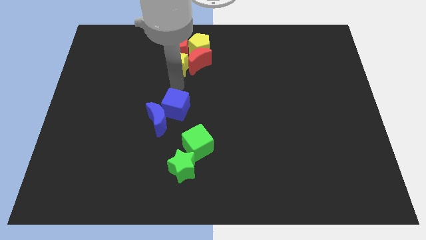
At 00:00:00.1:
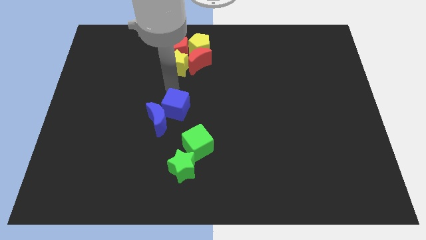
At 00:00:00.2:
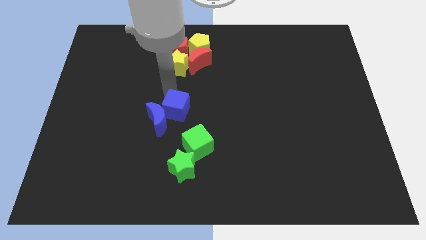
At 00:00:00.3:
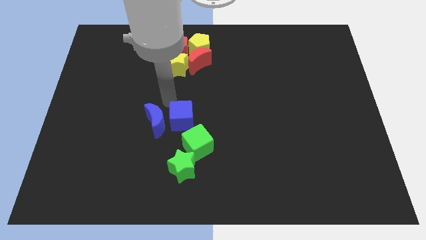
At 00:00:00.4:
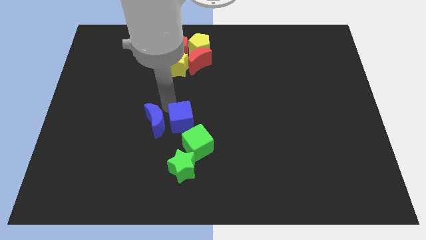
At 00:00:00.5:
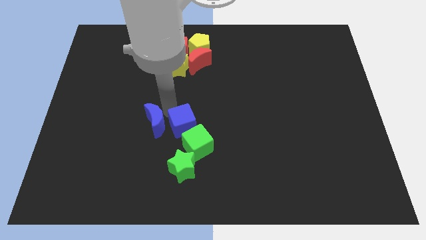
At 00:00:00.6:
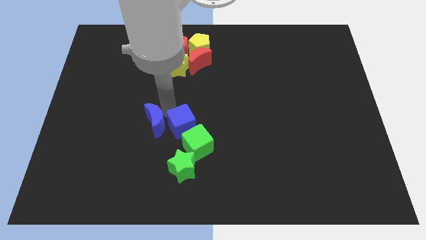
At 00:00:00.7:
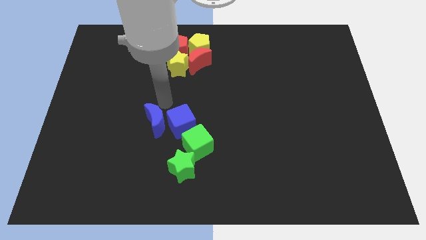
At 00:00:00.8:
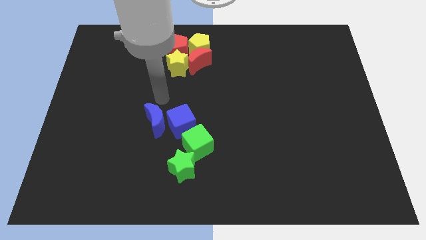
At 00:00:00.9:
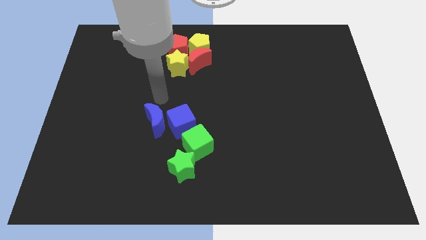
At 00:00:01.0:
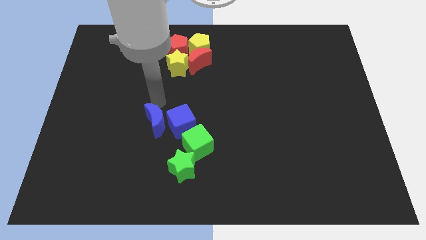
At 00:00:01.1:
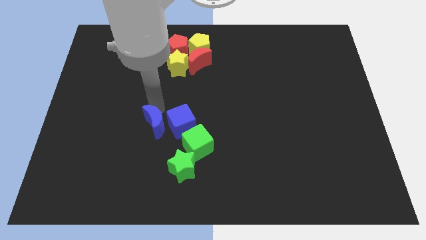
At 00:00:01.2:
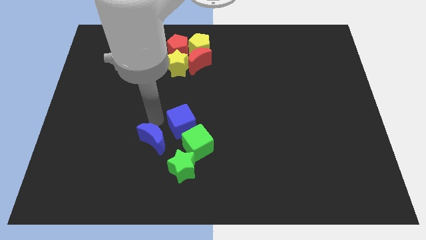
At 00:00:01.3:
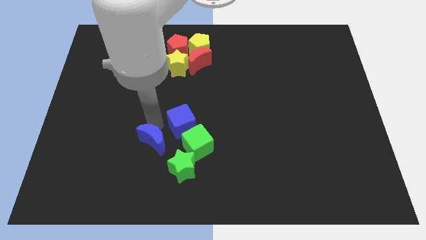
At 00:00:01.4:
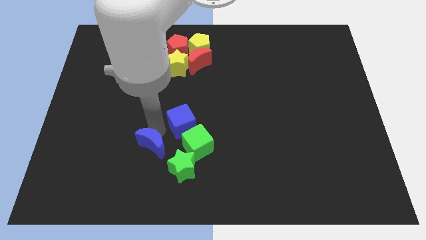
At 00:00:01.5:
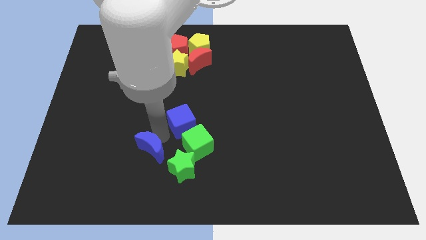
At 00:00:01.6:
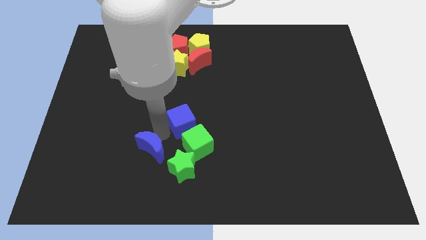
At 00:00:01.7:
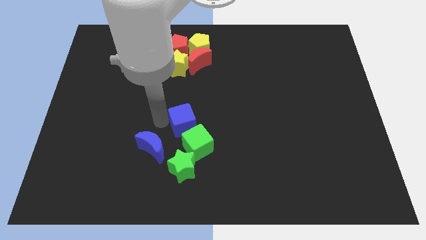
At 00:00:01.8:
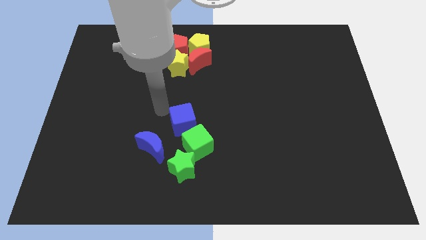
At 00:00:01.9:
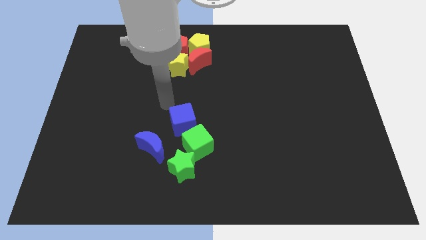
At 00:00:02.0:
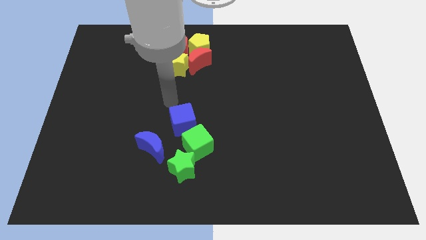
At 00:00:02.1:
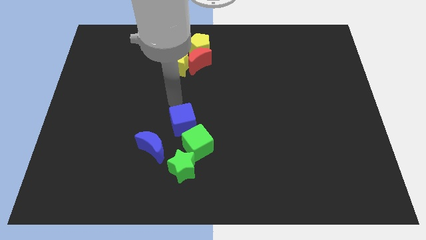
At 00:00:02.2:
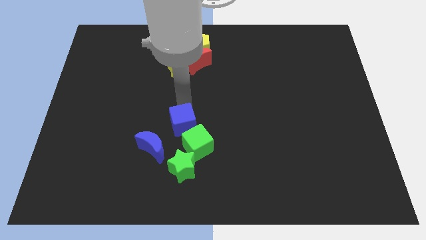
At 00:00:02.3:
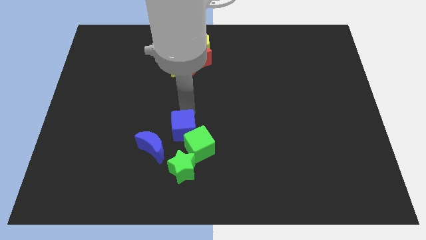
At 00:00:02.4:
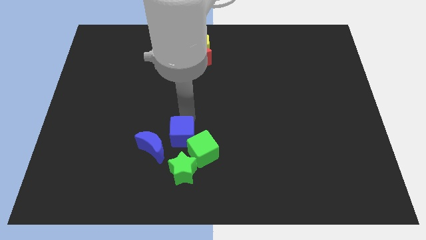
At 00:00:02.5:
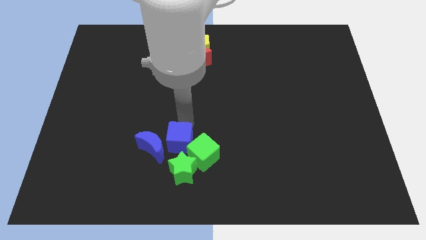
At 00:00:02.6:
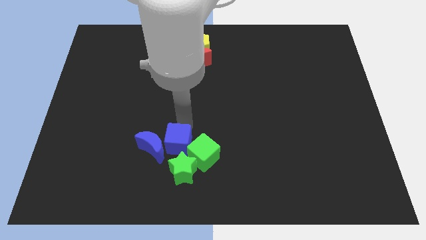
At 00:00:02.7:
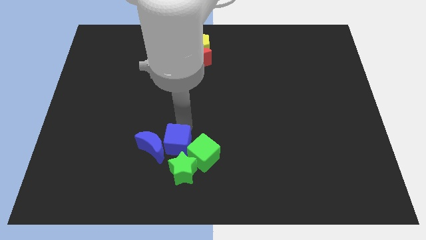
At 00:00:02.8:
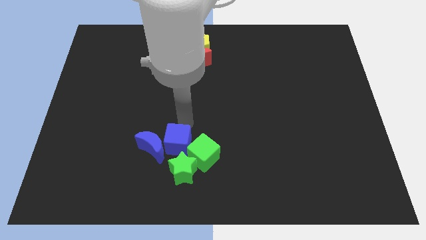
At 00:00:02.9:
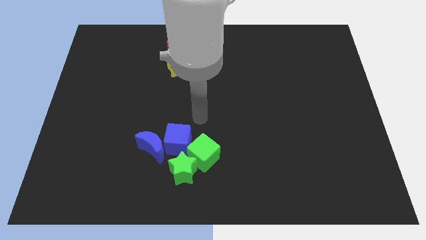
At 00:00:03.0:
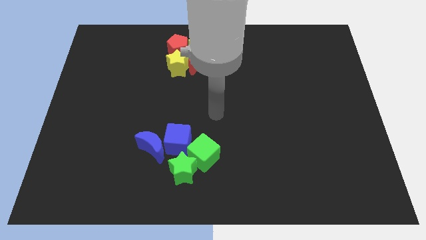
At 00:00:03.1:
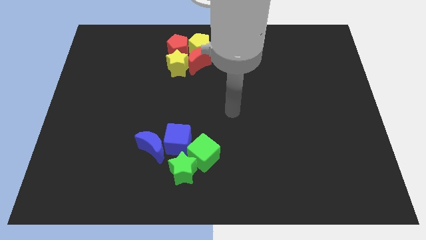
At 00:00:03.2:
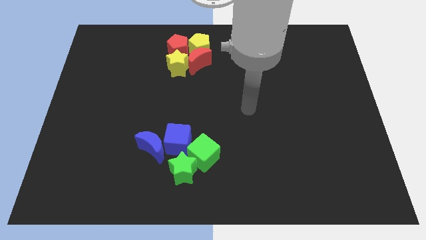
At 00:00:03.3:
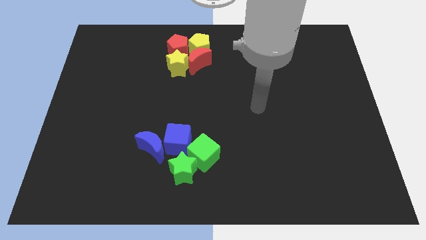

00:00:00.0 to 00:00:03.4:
push the green and the blue blocks slightly to the down

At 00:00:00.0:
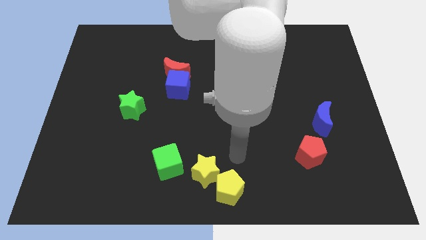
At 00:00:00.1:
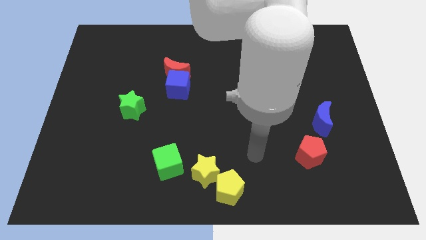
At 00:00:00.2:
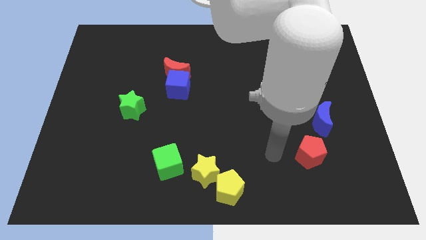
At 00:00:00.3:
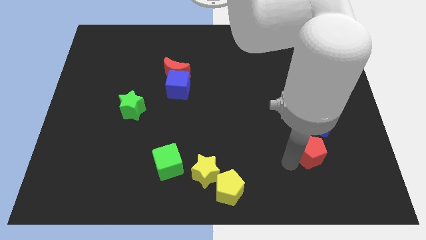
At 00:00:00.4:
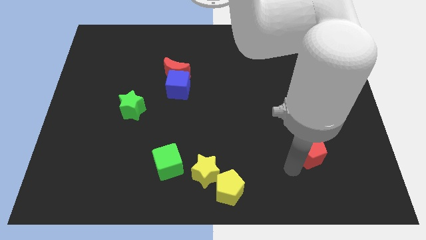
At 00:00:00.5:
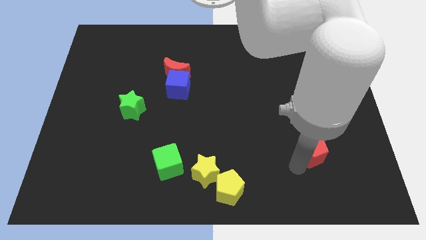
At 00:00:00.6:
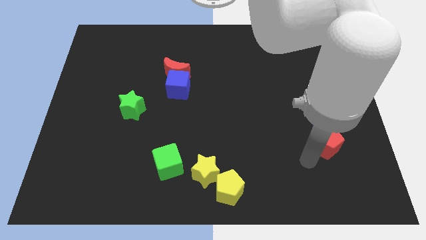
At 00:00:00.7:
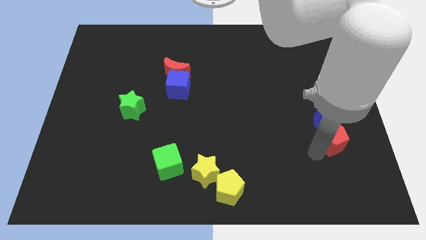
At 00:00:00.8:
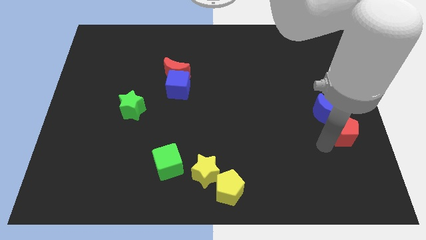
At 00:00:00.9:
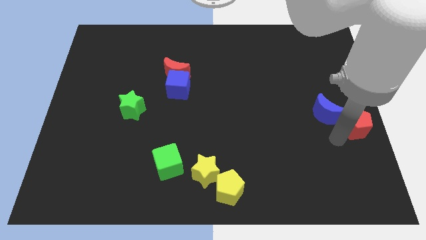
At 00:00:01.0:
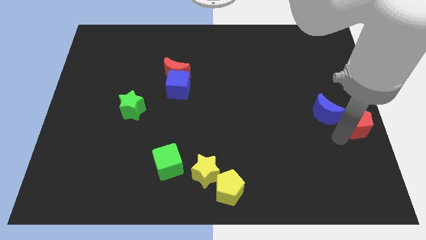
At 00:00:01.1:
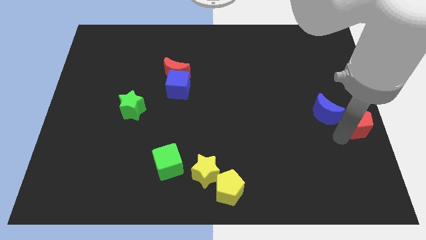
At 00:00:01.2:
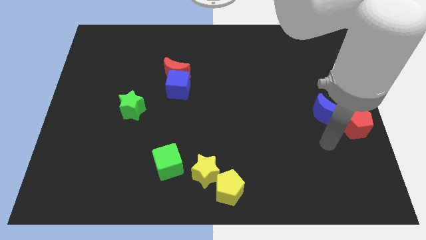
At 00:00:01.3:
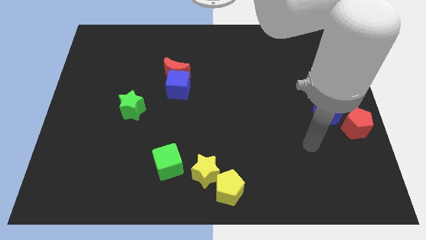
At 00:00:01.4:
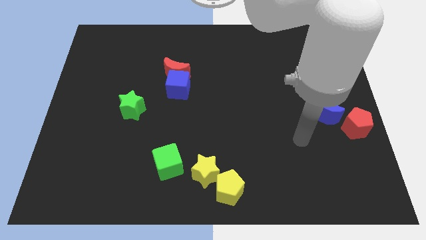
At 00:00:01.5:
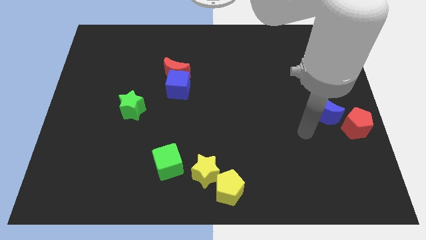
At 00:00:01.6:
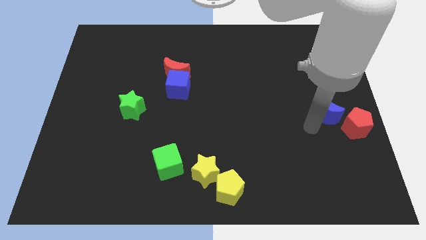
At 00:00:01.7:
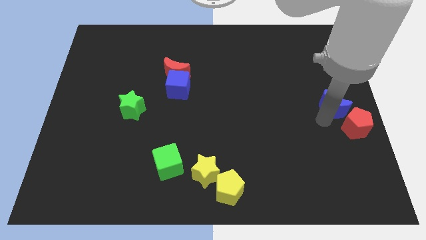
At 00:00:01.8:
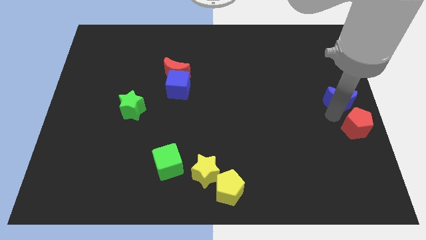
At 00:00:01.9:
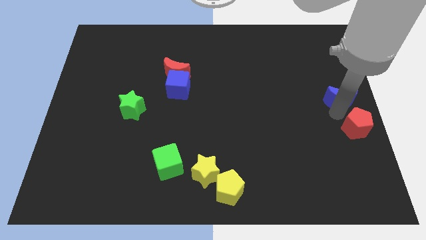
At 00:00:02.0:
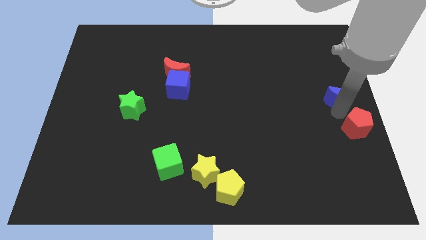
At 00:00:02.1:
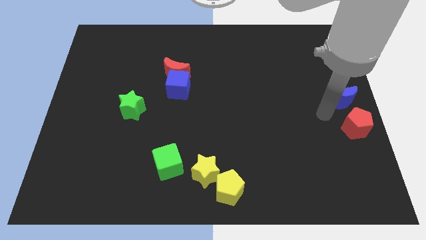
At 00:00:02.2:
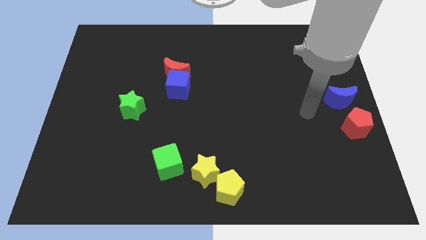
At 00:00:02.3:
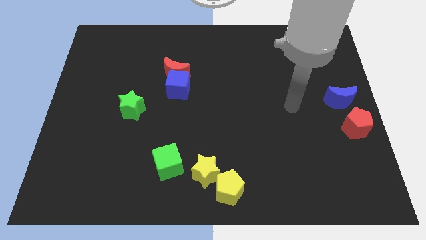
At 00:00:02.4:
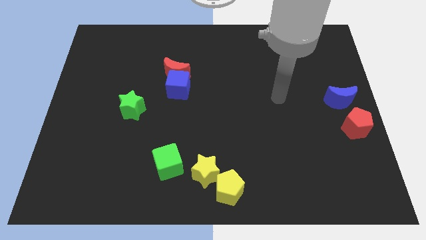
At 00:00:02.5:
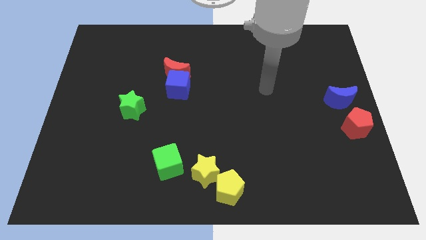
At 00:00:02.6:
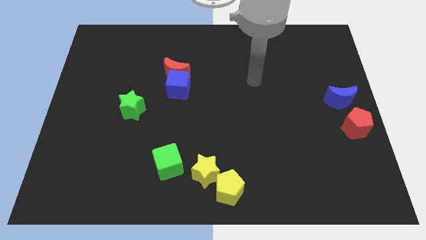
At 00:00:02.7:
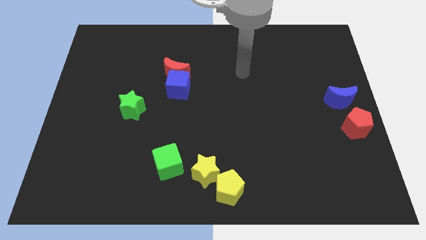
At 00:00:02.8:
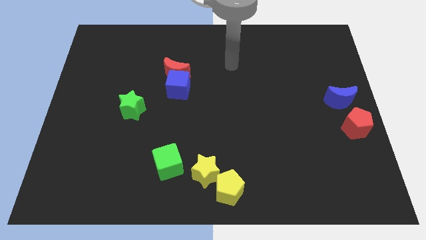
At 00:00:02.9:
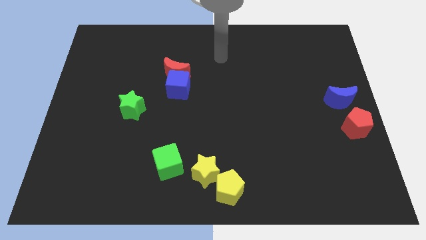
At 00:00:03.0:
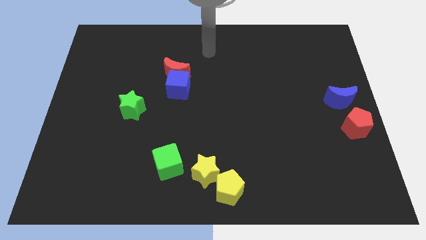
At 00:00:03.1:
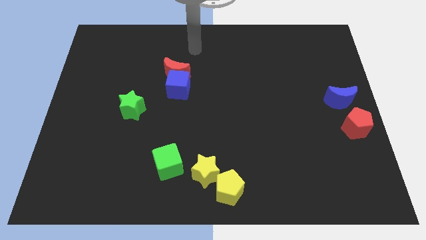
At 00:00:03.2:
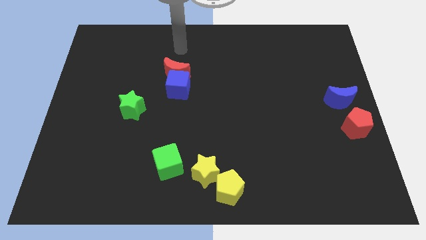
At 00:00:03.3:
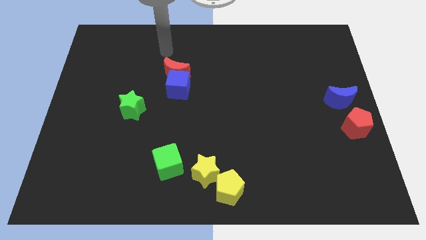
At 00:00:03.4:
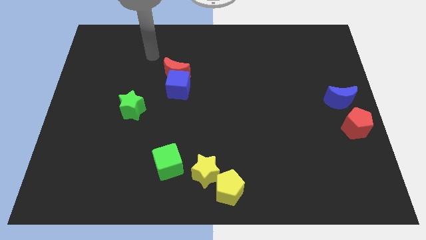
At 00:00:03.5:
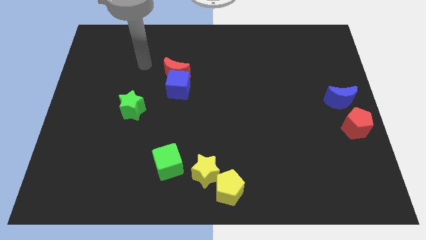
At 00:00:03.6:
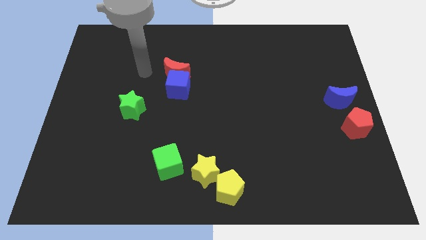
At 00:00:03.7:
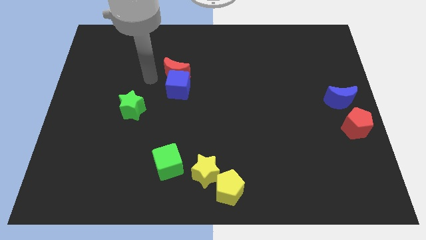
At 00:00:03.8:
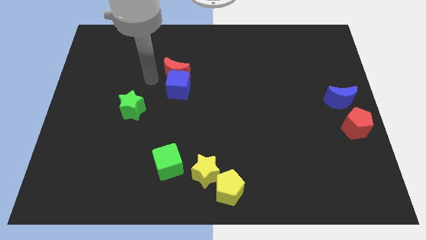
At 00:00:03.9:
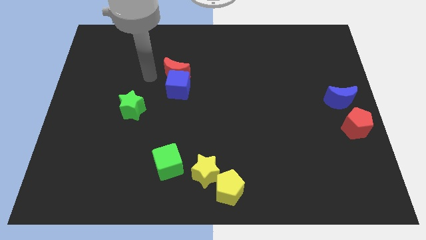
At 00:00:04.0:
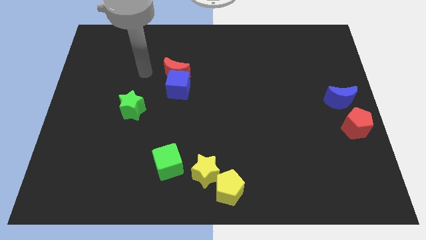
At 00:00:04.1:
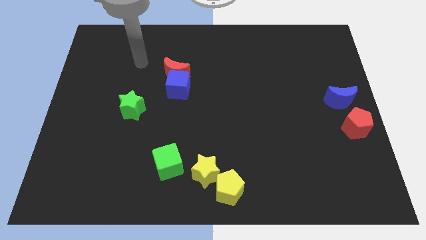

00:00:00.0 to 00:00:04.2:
push the red pentagon into the blue crescent

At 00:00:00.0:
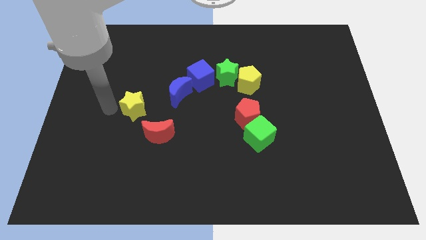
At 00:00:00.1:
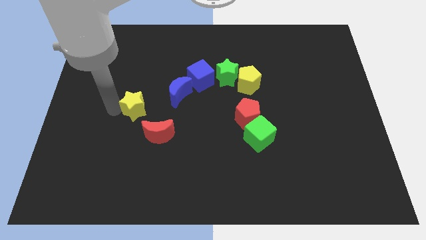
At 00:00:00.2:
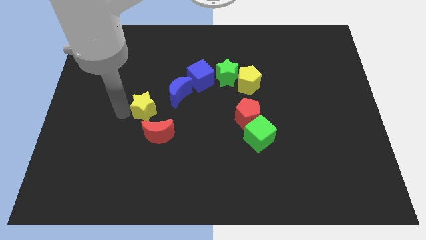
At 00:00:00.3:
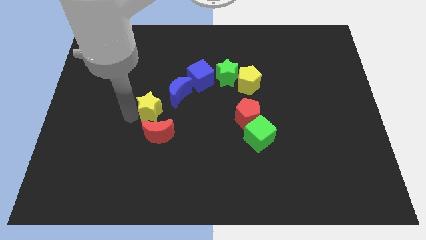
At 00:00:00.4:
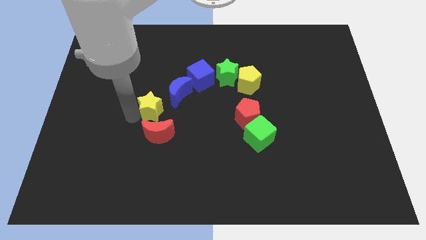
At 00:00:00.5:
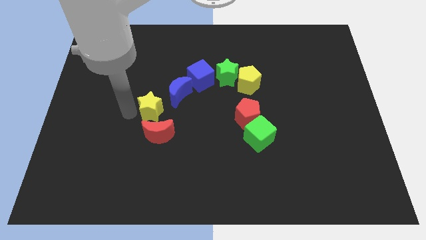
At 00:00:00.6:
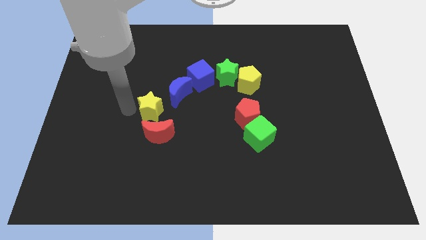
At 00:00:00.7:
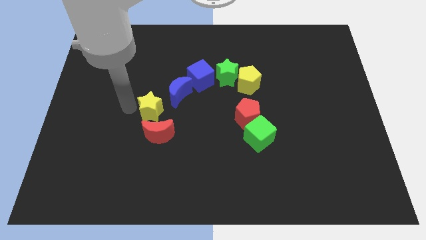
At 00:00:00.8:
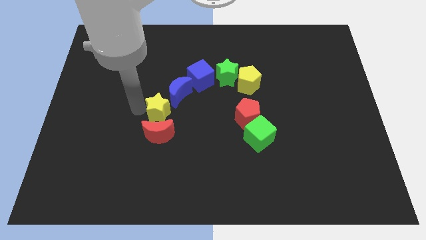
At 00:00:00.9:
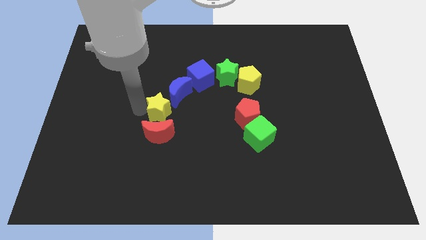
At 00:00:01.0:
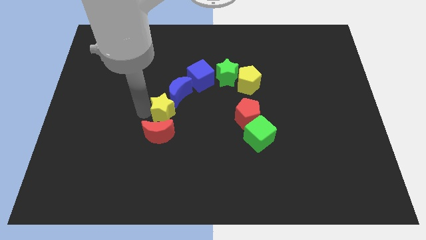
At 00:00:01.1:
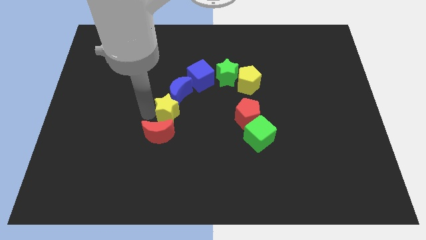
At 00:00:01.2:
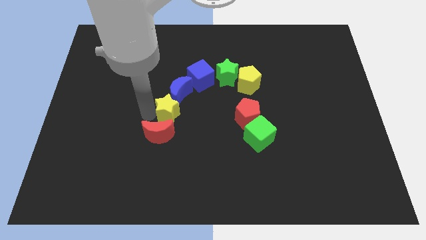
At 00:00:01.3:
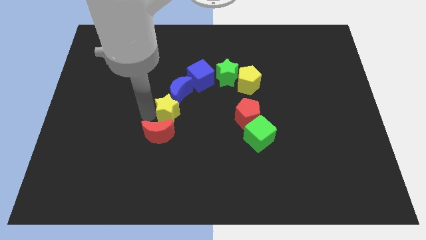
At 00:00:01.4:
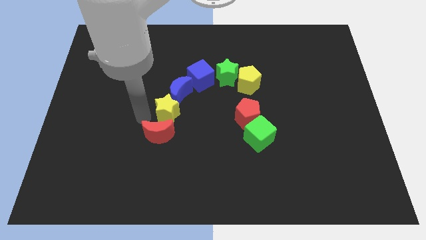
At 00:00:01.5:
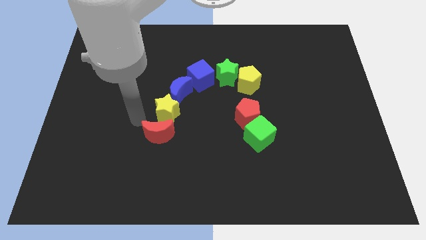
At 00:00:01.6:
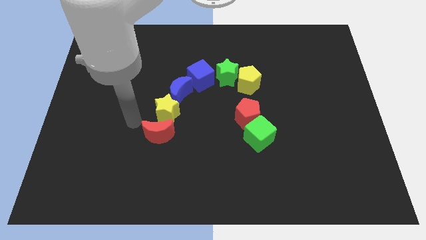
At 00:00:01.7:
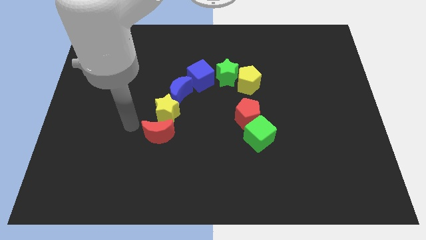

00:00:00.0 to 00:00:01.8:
slide the yellow star vertically above the red moon
